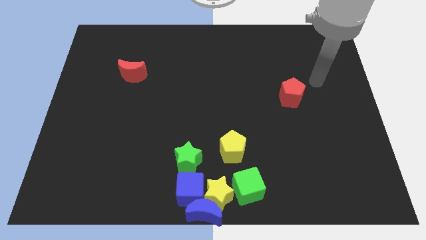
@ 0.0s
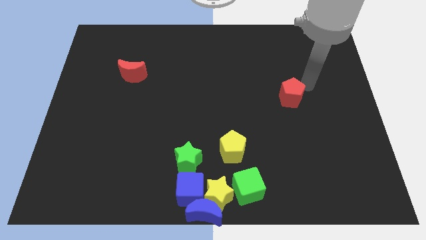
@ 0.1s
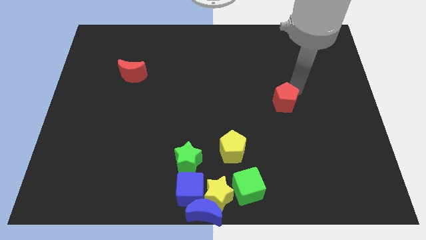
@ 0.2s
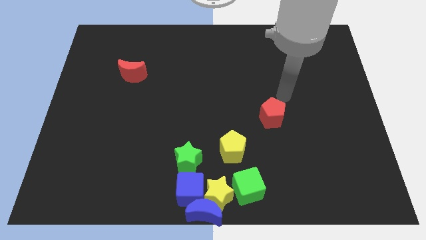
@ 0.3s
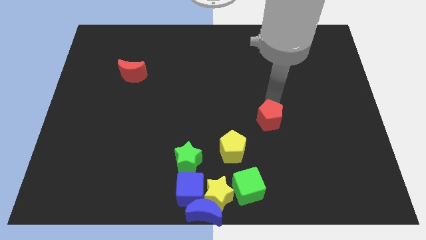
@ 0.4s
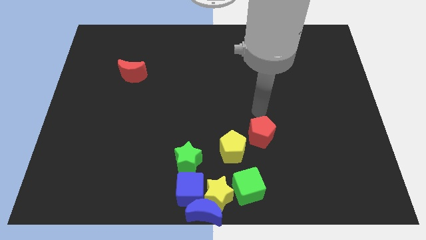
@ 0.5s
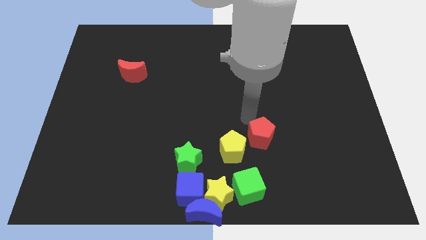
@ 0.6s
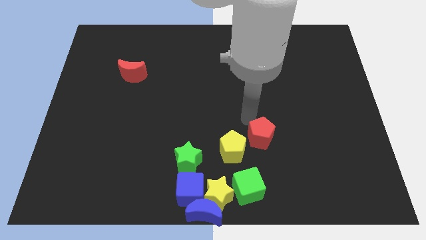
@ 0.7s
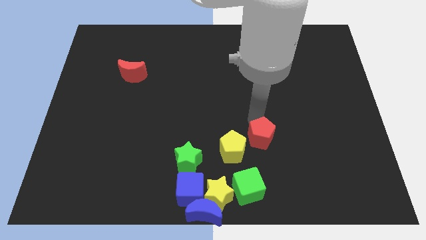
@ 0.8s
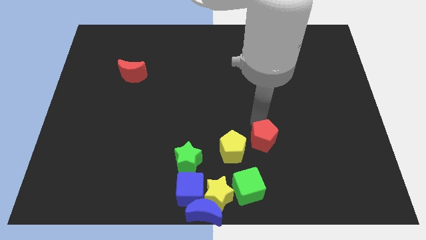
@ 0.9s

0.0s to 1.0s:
move the red pentagon towards yellow pentagon

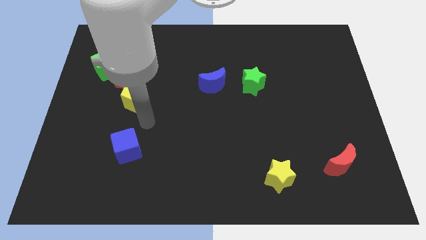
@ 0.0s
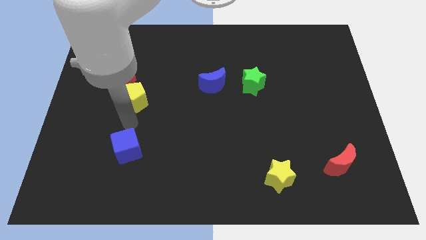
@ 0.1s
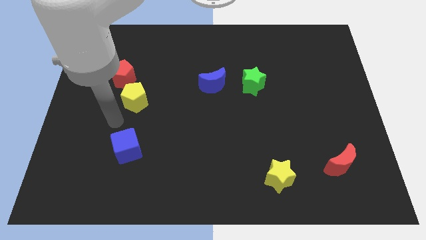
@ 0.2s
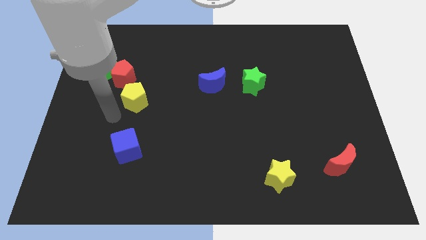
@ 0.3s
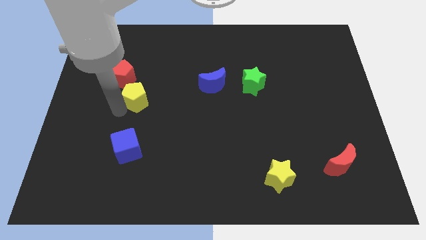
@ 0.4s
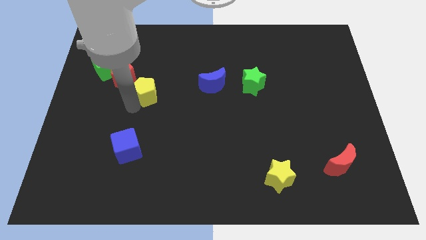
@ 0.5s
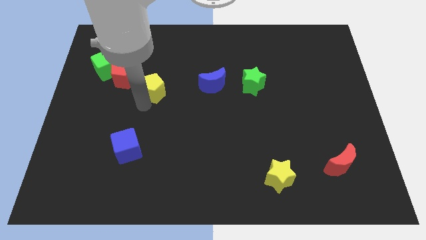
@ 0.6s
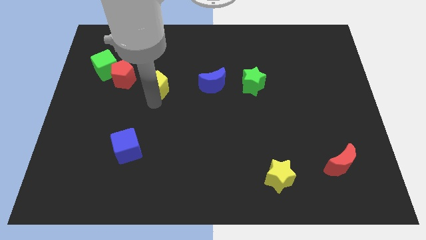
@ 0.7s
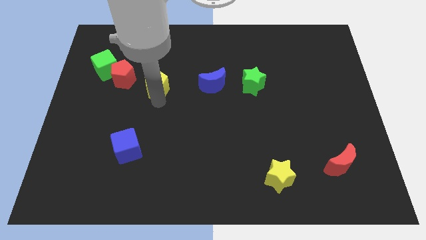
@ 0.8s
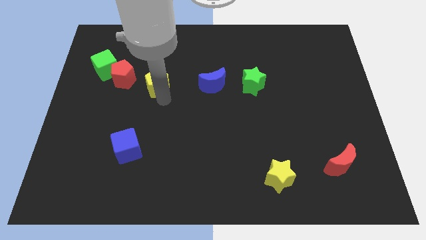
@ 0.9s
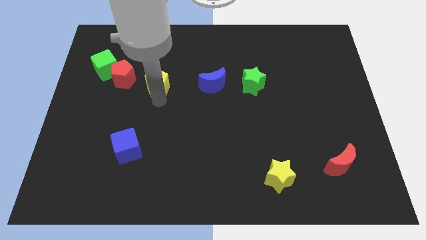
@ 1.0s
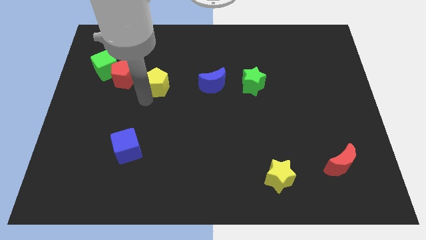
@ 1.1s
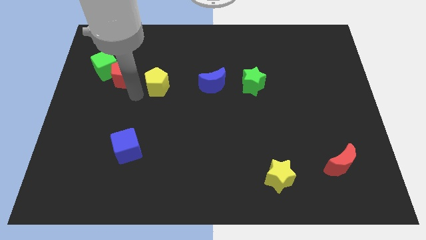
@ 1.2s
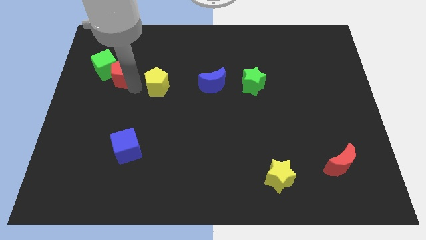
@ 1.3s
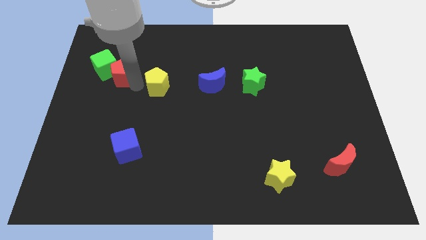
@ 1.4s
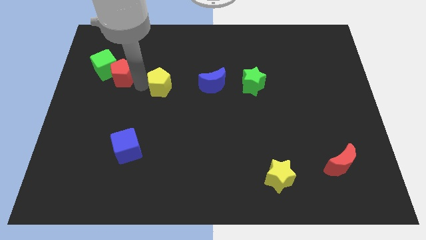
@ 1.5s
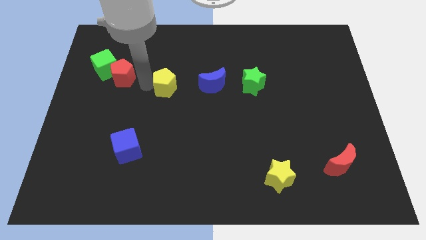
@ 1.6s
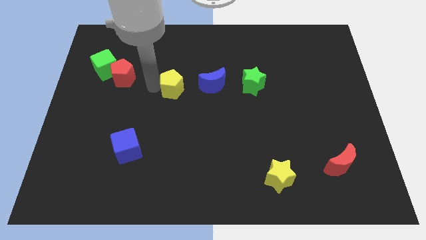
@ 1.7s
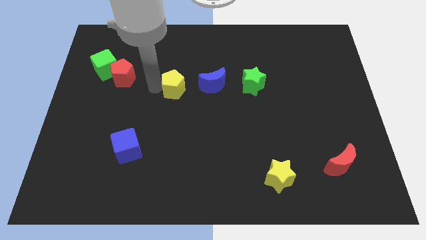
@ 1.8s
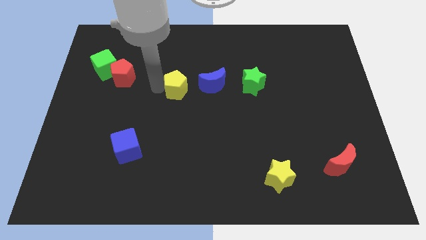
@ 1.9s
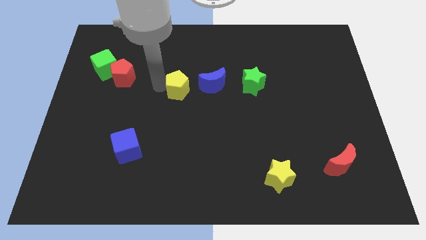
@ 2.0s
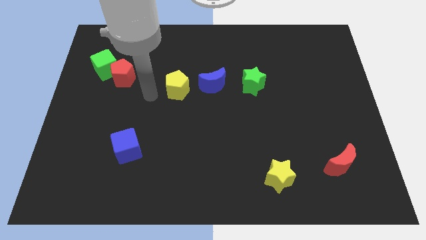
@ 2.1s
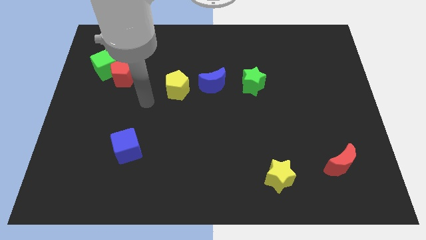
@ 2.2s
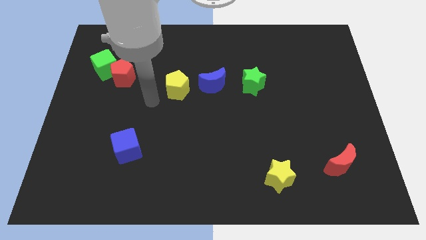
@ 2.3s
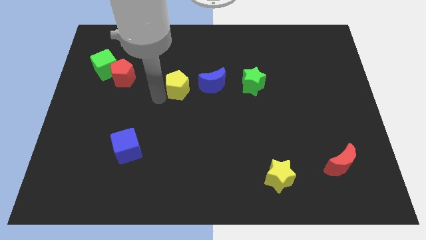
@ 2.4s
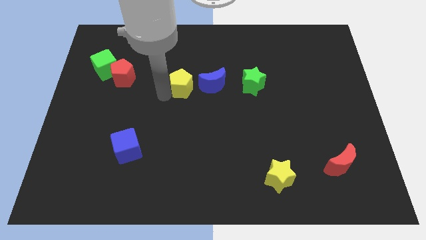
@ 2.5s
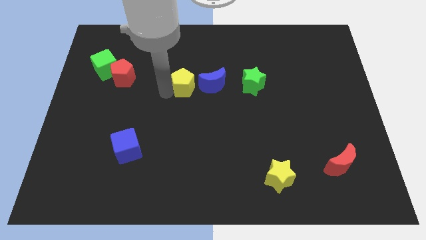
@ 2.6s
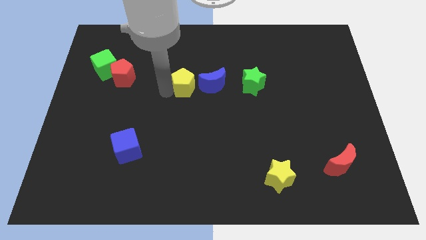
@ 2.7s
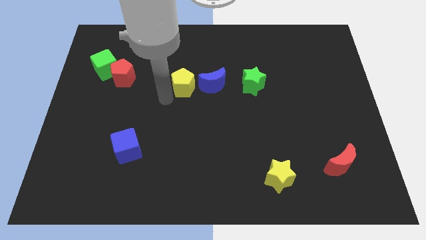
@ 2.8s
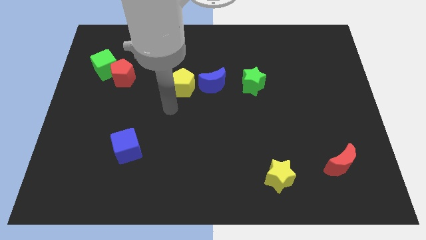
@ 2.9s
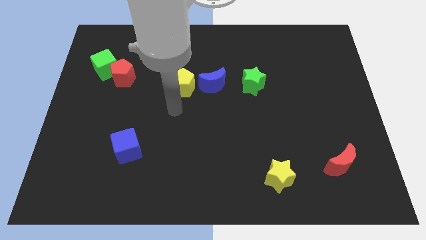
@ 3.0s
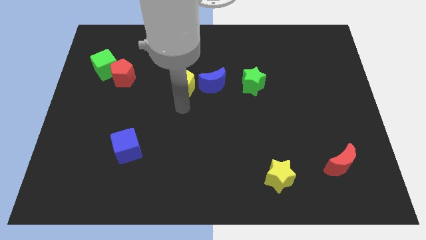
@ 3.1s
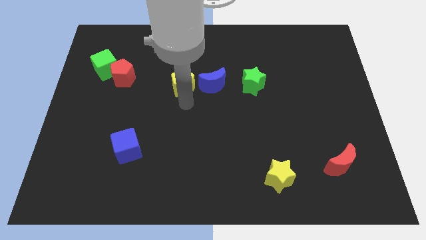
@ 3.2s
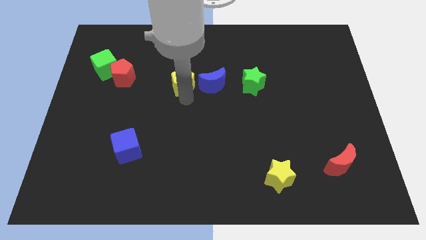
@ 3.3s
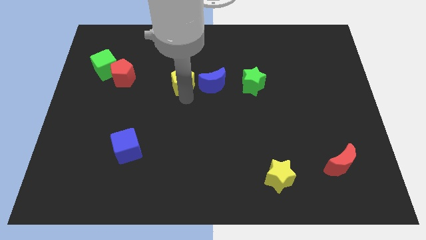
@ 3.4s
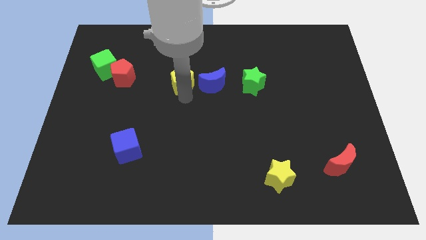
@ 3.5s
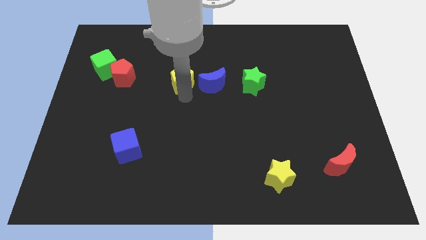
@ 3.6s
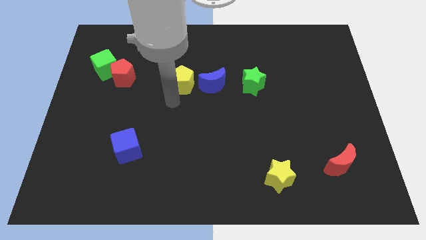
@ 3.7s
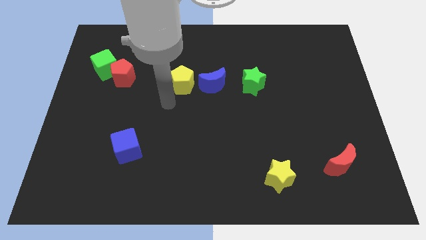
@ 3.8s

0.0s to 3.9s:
move the yellow pentagon close to the left side of the blue crescent

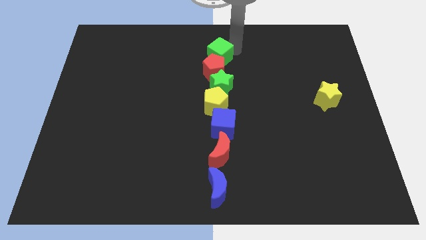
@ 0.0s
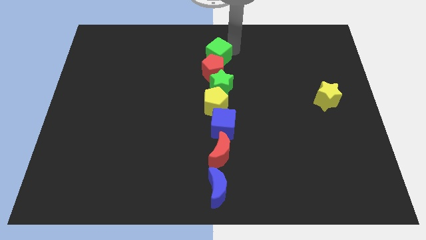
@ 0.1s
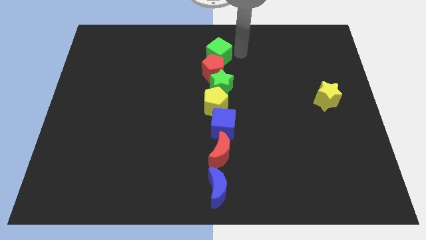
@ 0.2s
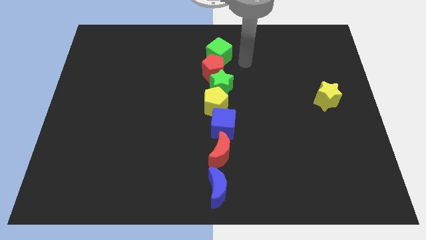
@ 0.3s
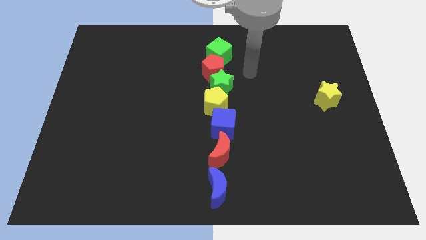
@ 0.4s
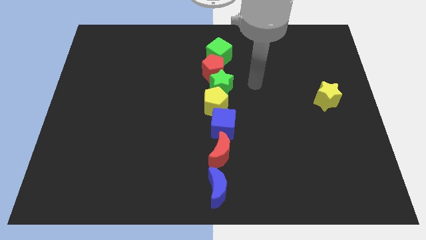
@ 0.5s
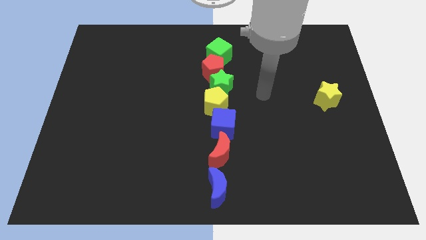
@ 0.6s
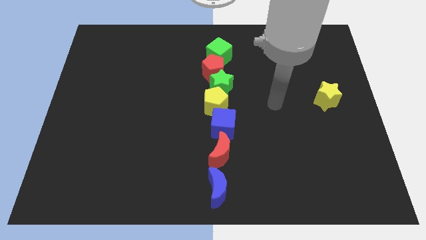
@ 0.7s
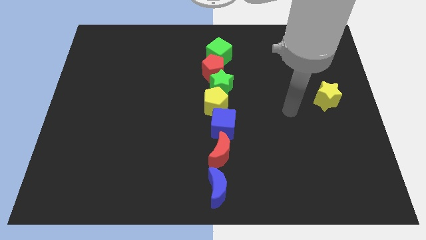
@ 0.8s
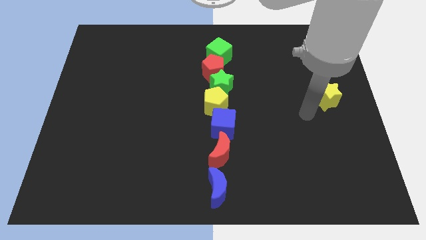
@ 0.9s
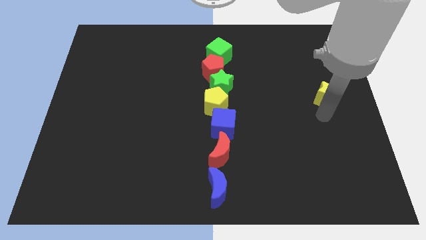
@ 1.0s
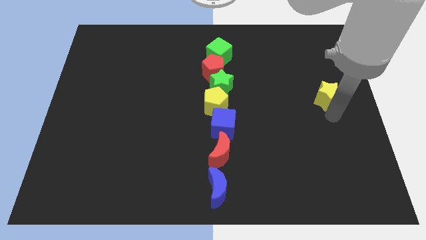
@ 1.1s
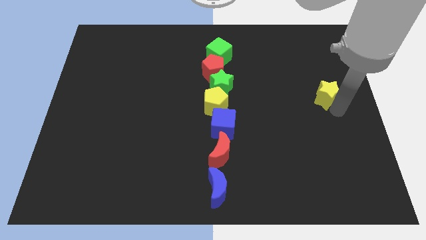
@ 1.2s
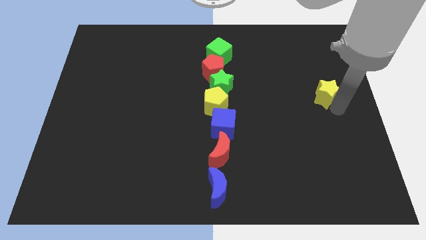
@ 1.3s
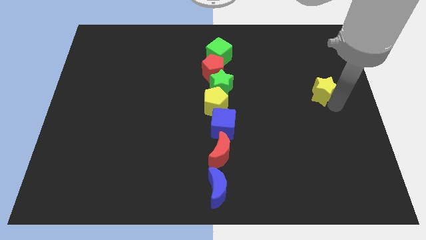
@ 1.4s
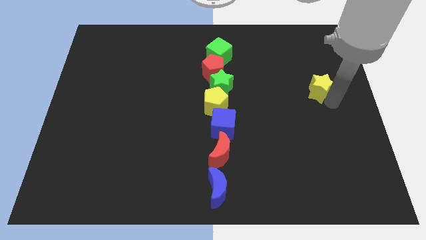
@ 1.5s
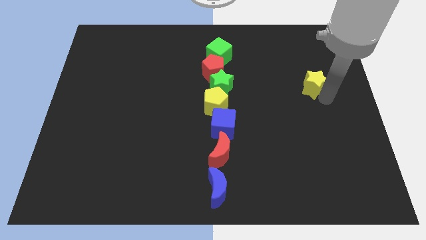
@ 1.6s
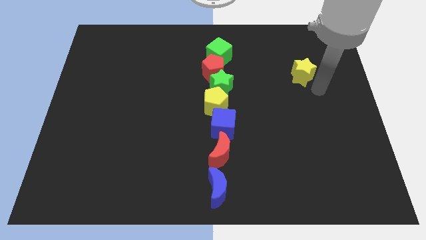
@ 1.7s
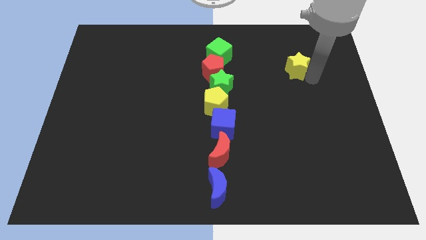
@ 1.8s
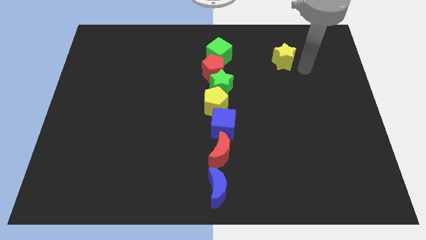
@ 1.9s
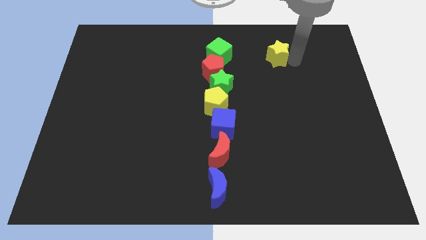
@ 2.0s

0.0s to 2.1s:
push the yellow star parallel to green cube

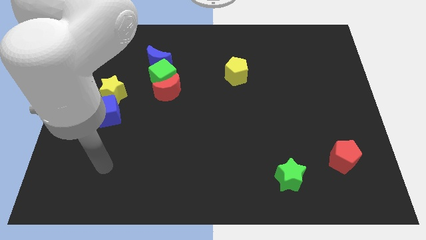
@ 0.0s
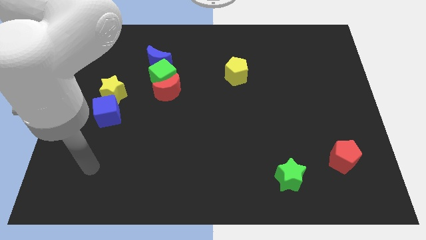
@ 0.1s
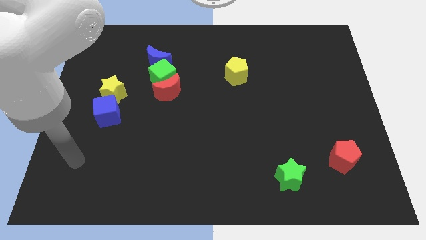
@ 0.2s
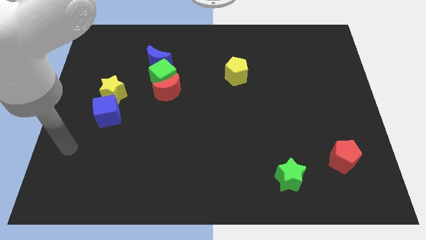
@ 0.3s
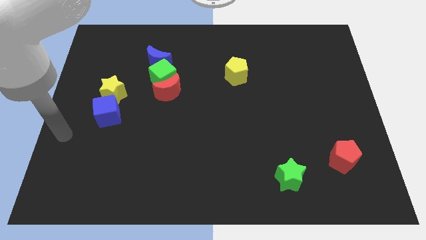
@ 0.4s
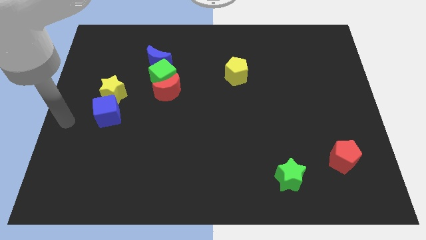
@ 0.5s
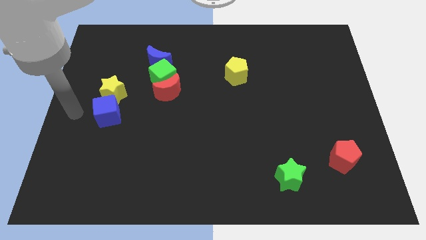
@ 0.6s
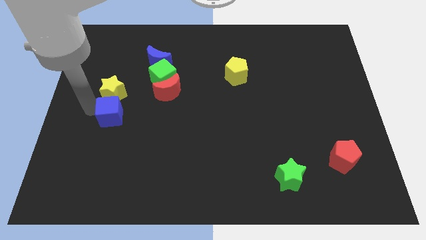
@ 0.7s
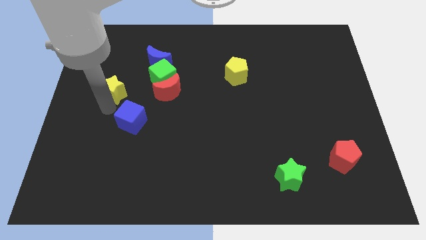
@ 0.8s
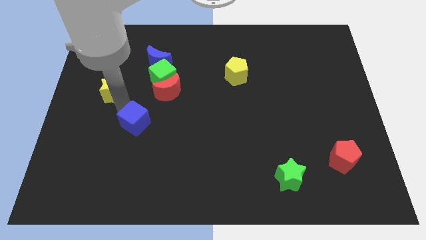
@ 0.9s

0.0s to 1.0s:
separate the blue cube from the yellow star

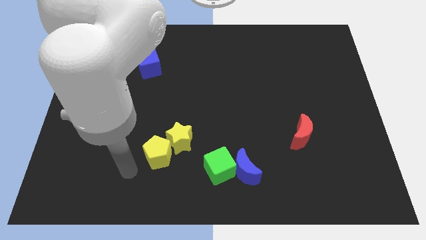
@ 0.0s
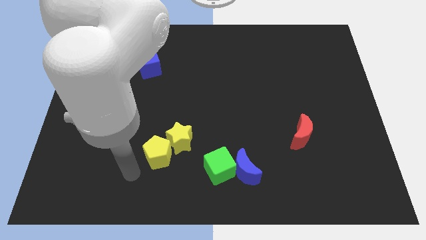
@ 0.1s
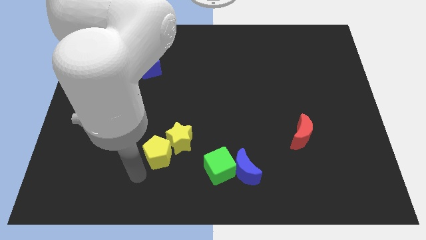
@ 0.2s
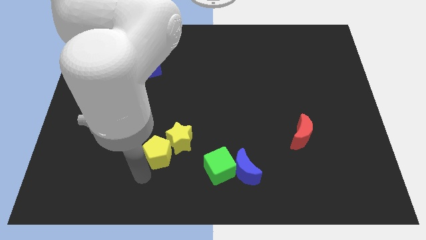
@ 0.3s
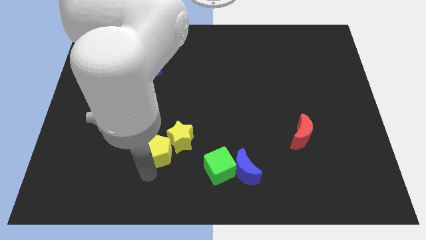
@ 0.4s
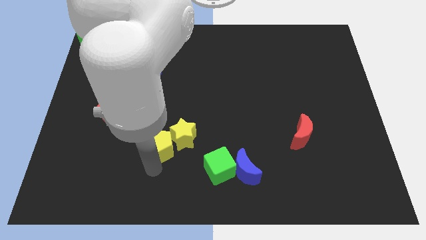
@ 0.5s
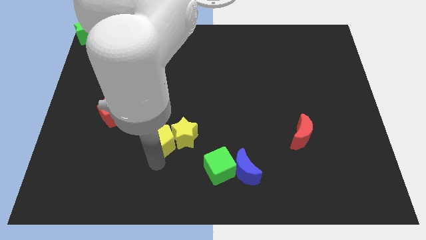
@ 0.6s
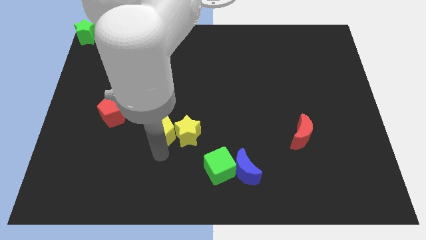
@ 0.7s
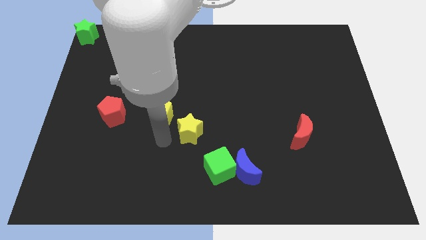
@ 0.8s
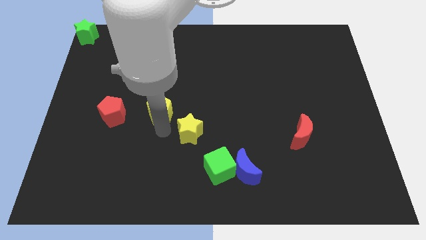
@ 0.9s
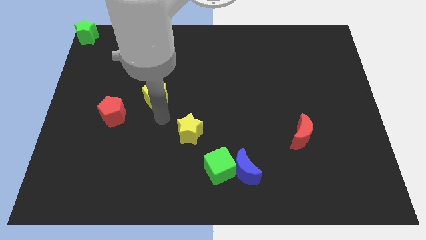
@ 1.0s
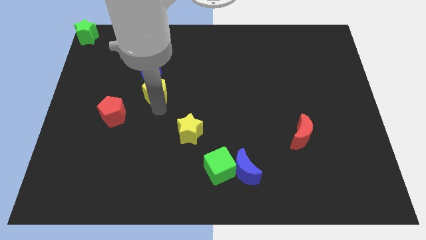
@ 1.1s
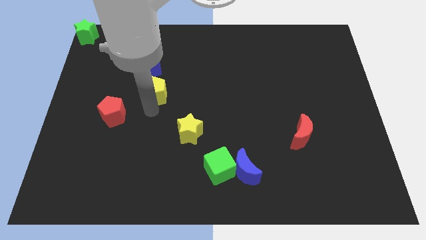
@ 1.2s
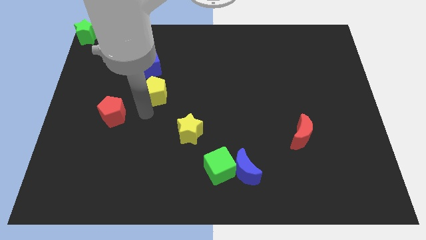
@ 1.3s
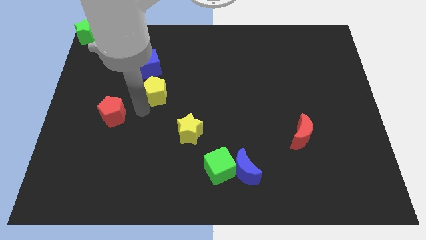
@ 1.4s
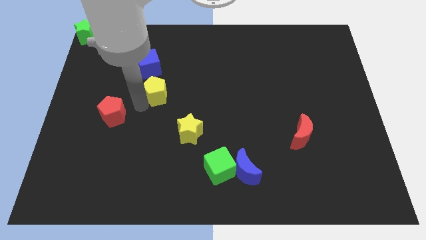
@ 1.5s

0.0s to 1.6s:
place the yellow pentagon below the blue cube
